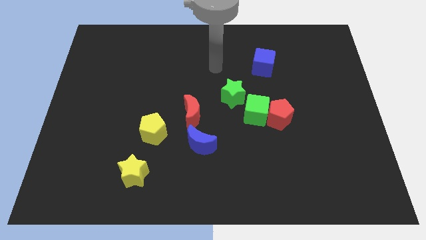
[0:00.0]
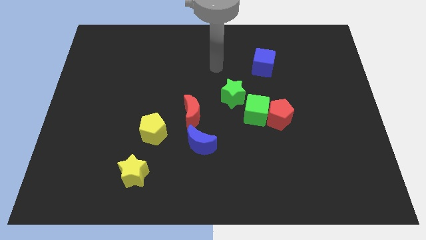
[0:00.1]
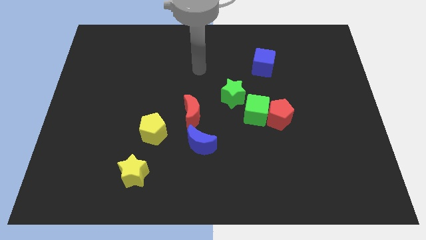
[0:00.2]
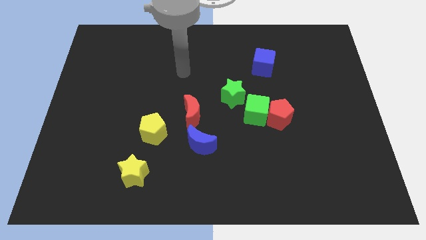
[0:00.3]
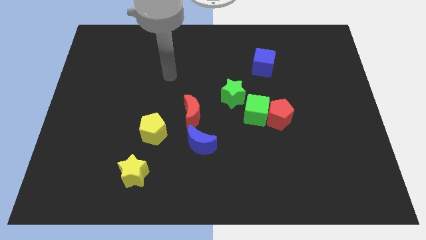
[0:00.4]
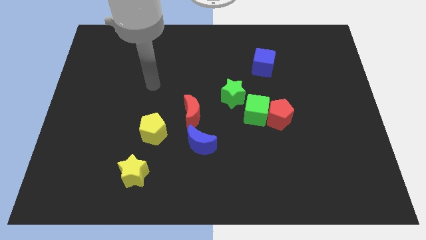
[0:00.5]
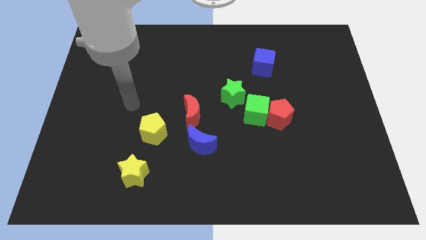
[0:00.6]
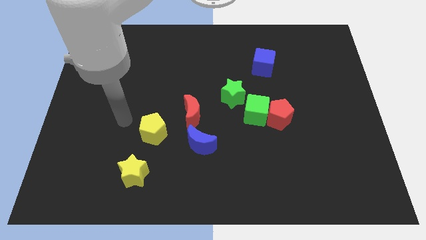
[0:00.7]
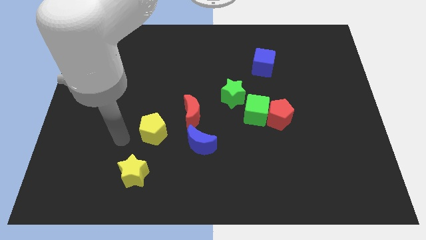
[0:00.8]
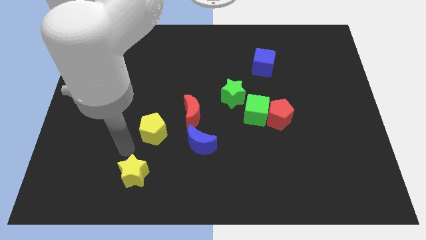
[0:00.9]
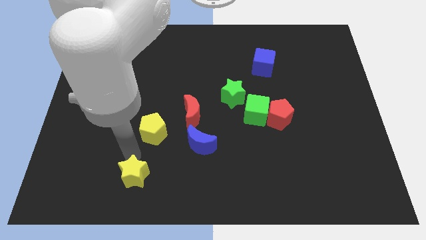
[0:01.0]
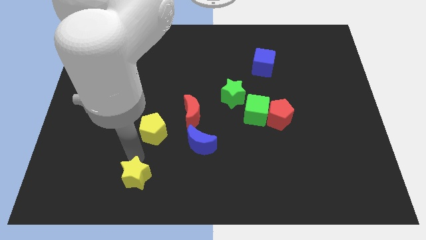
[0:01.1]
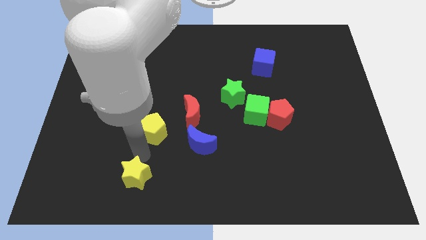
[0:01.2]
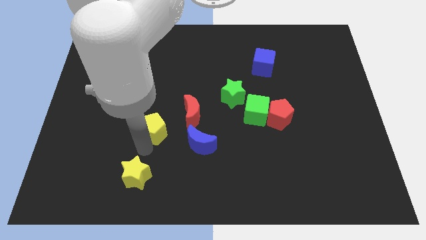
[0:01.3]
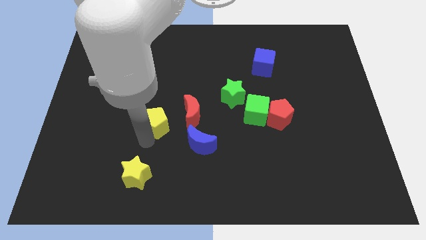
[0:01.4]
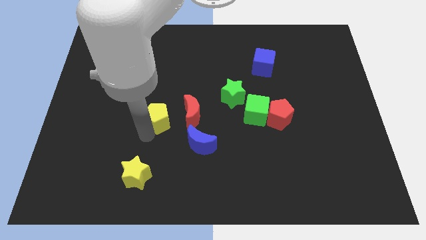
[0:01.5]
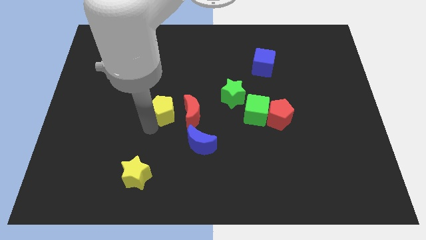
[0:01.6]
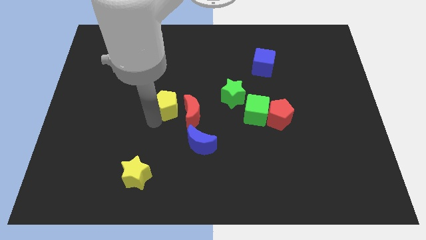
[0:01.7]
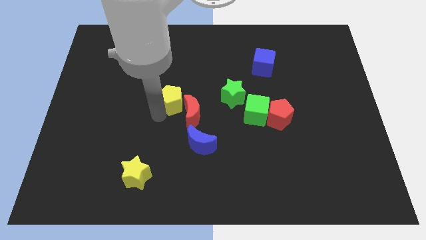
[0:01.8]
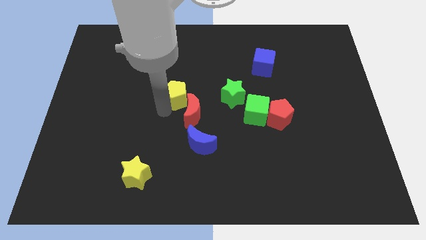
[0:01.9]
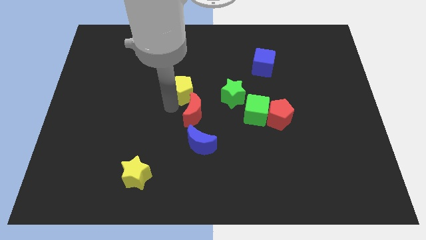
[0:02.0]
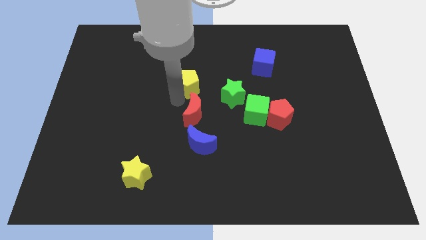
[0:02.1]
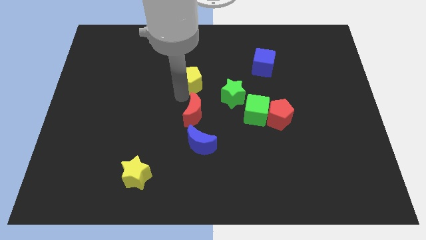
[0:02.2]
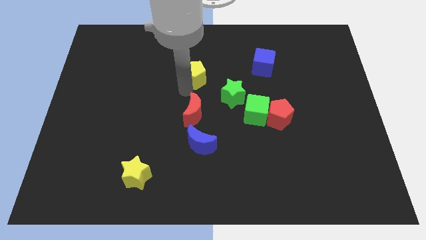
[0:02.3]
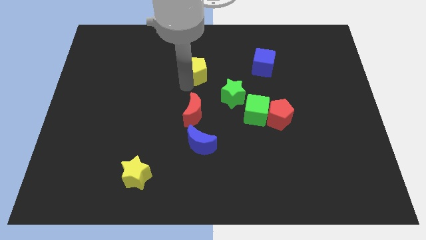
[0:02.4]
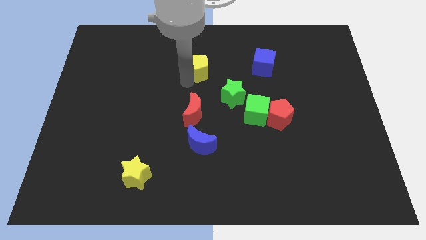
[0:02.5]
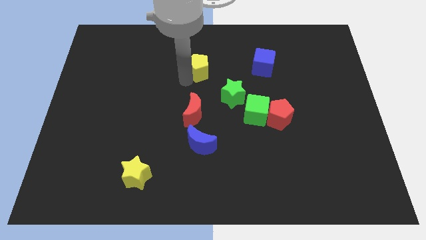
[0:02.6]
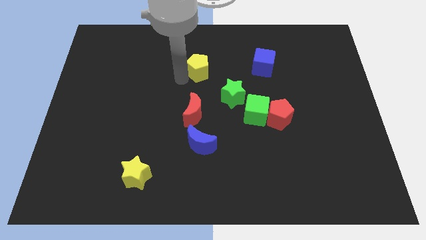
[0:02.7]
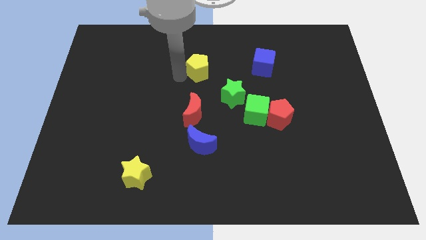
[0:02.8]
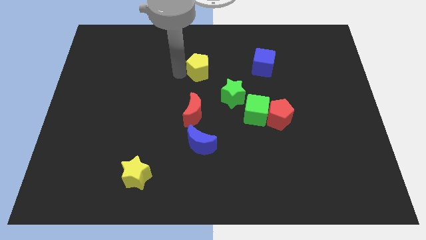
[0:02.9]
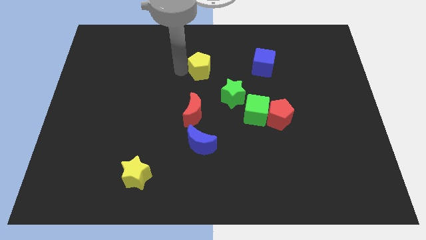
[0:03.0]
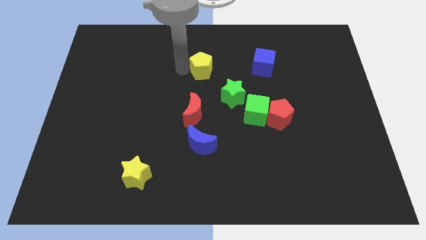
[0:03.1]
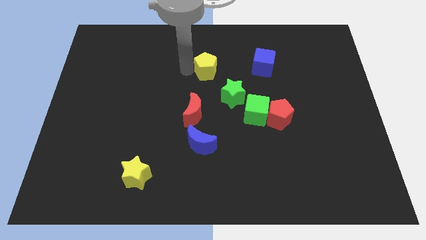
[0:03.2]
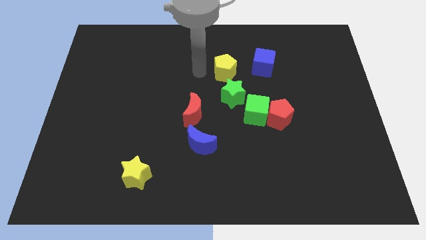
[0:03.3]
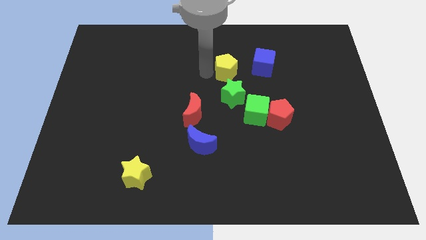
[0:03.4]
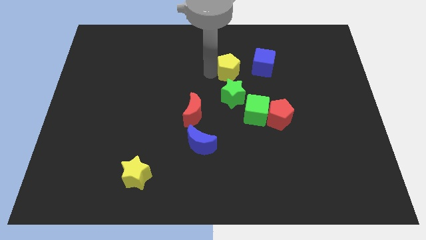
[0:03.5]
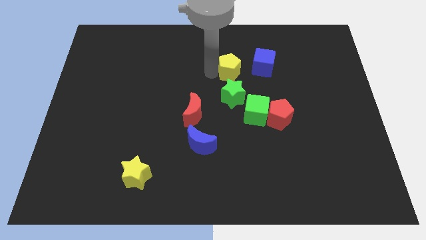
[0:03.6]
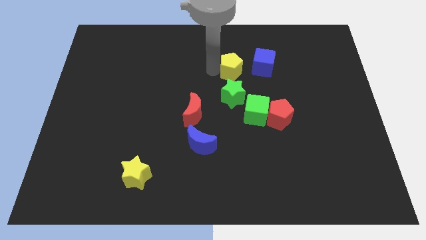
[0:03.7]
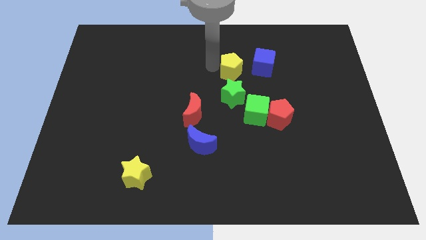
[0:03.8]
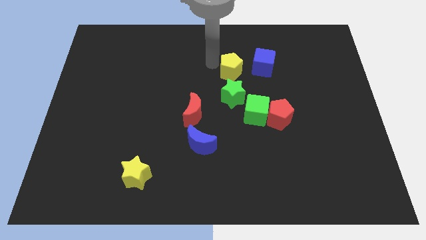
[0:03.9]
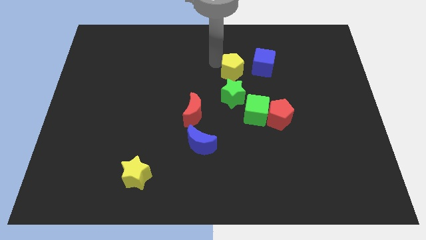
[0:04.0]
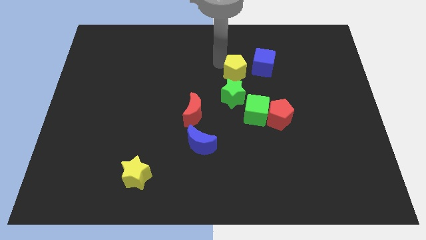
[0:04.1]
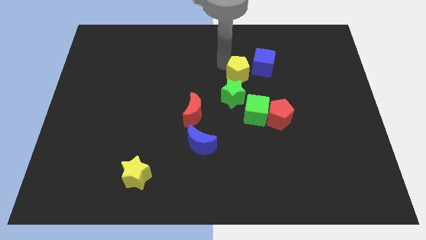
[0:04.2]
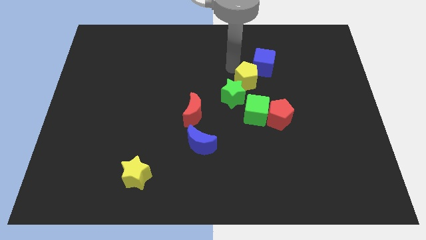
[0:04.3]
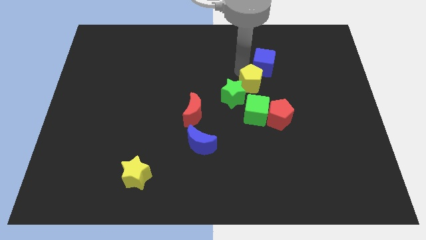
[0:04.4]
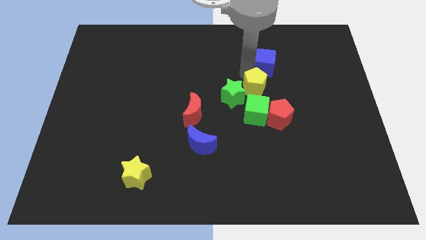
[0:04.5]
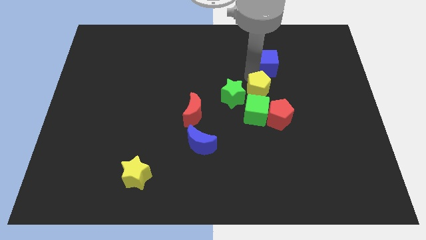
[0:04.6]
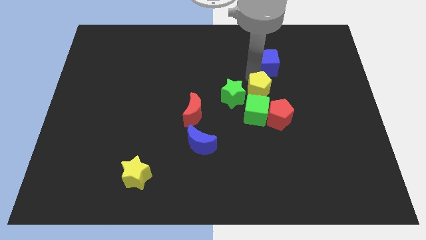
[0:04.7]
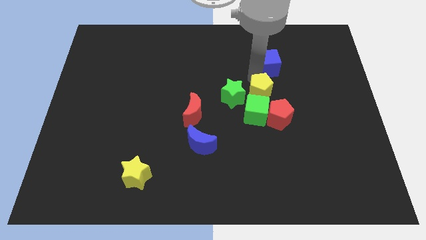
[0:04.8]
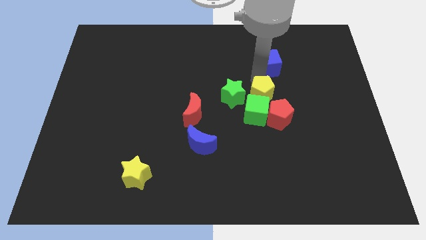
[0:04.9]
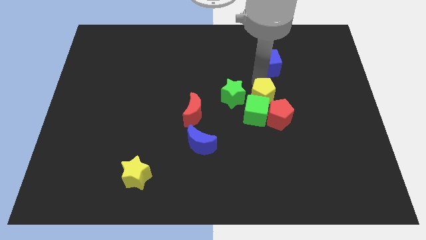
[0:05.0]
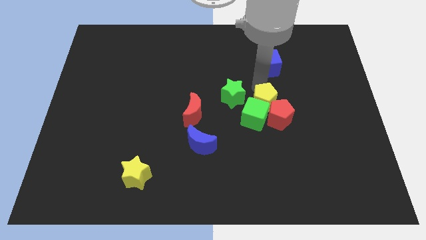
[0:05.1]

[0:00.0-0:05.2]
move the yellow pentagon next to the green cube

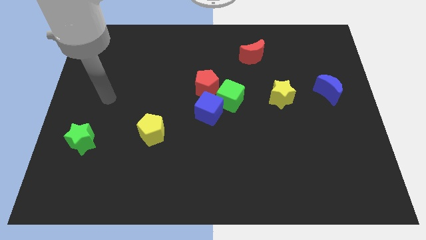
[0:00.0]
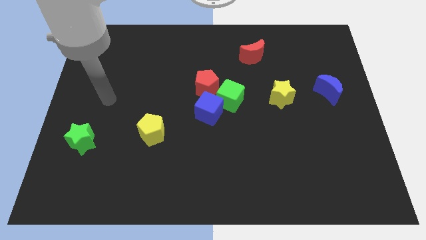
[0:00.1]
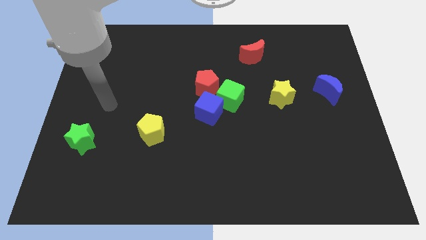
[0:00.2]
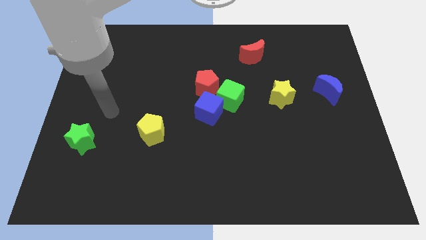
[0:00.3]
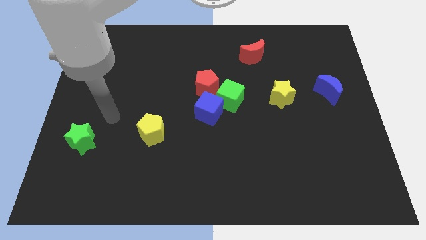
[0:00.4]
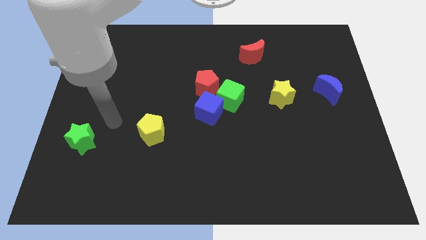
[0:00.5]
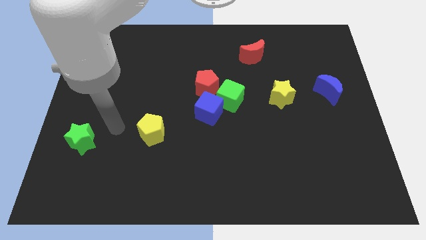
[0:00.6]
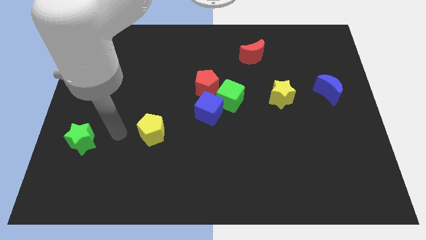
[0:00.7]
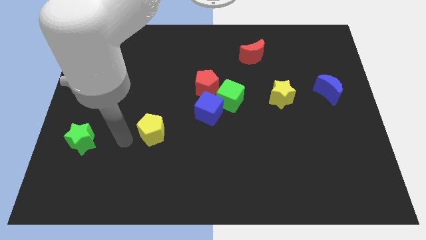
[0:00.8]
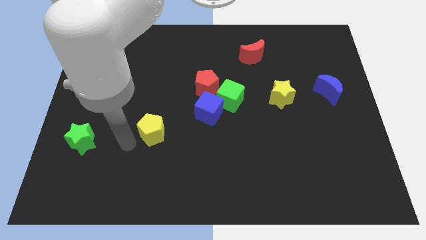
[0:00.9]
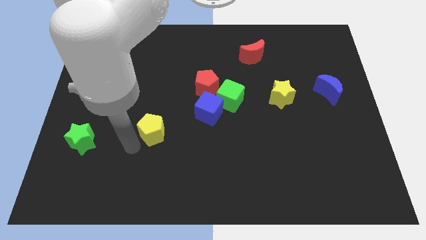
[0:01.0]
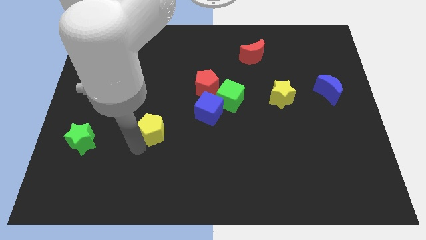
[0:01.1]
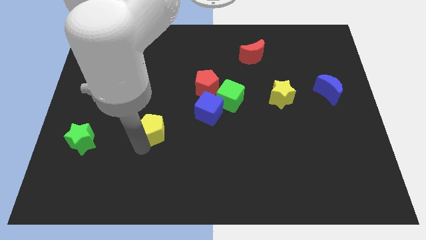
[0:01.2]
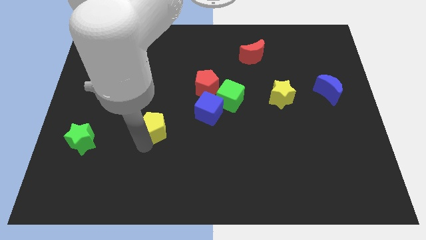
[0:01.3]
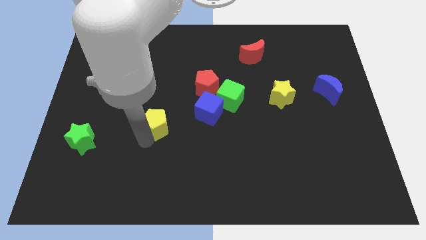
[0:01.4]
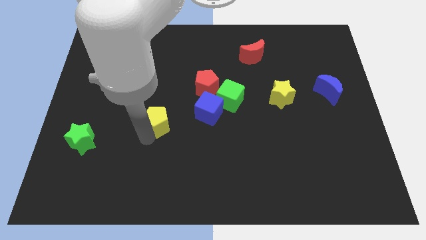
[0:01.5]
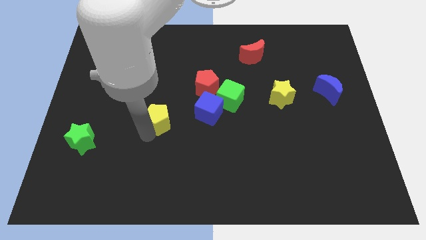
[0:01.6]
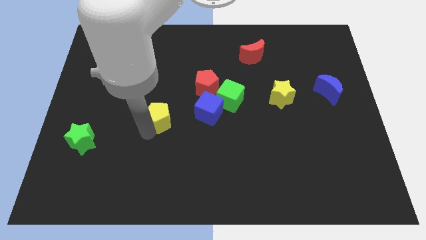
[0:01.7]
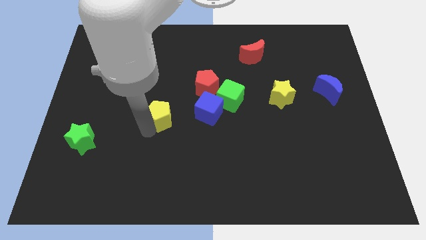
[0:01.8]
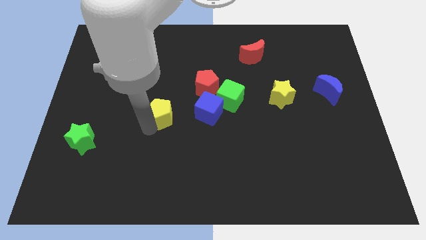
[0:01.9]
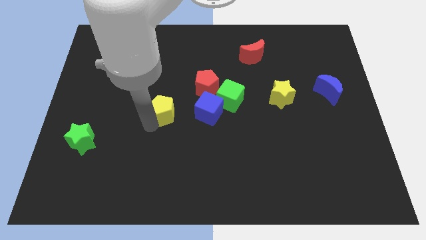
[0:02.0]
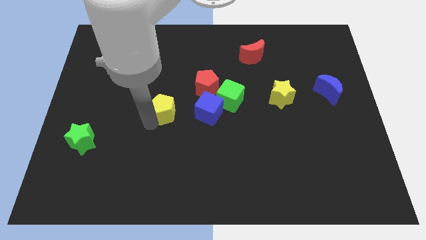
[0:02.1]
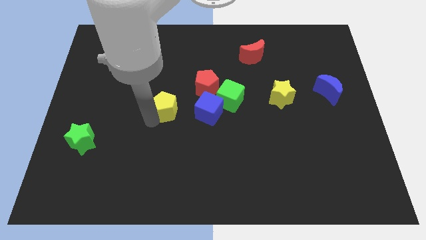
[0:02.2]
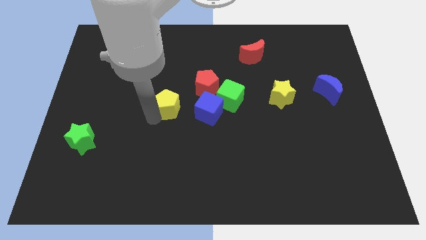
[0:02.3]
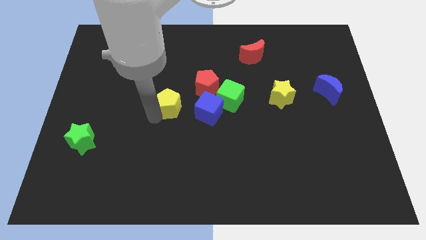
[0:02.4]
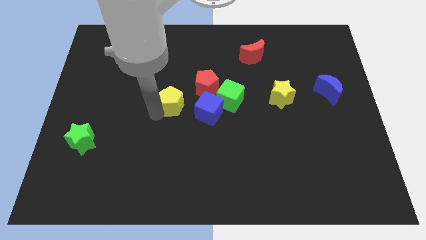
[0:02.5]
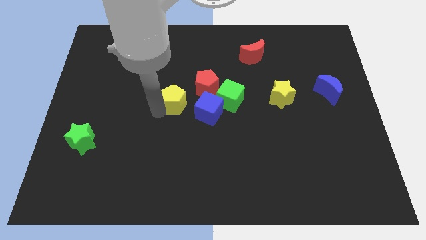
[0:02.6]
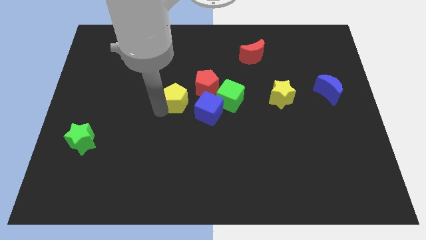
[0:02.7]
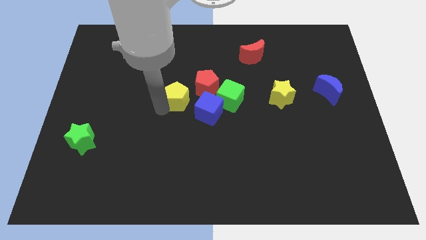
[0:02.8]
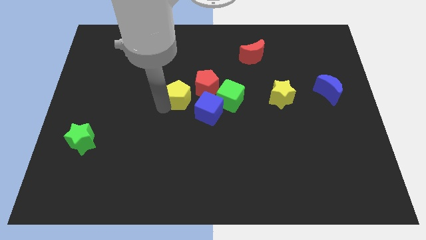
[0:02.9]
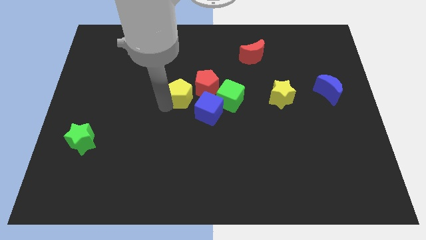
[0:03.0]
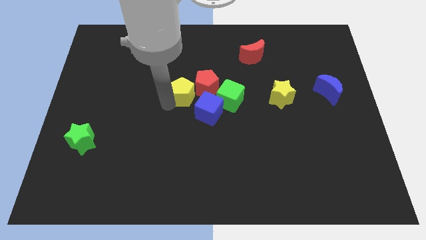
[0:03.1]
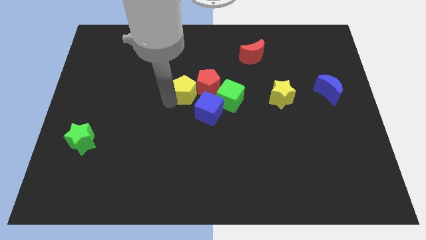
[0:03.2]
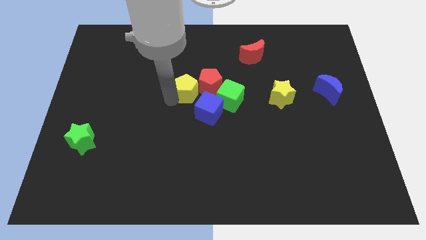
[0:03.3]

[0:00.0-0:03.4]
slide the yellow pentagon close to the red pentagon
